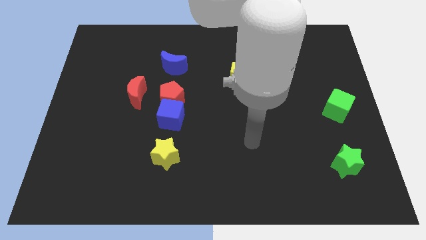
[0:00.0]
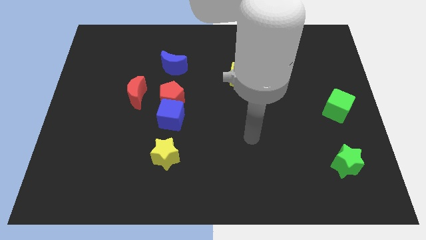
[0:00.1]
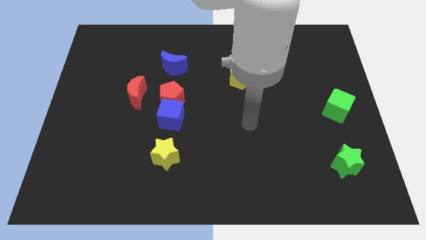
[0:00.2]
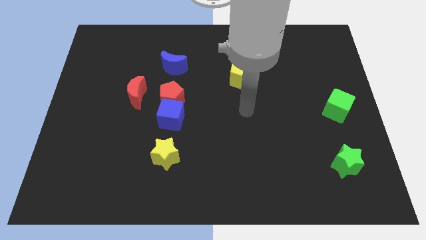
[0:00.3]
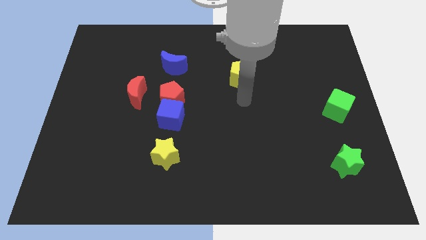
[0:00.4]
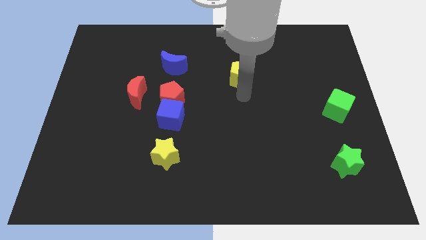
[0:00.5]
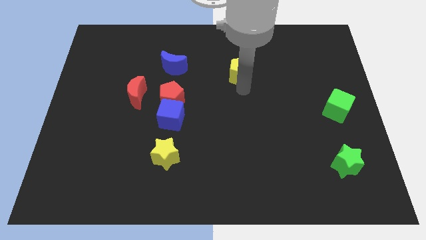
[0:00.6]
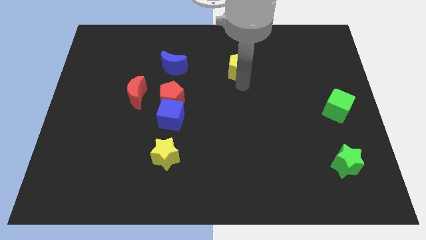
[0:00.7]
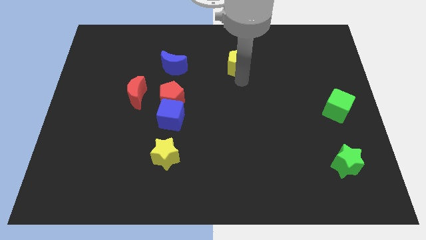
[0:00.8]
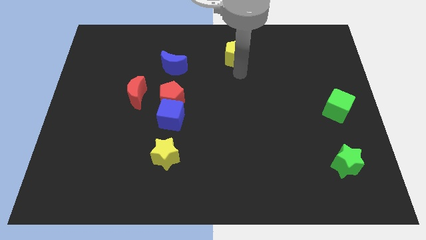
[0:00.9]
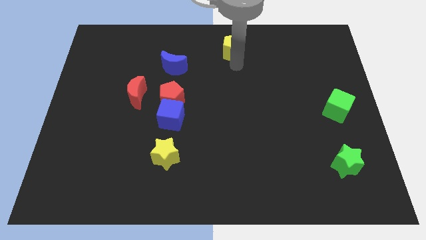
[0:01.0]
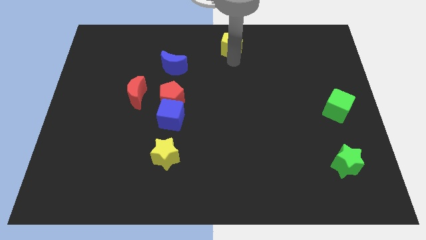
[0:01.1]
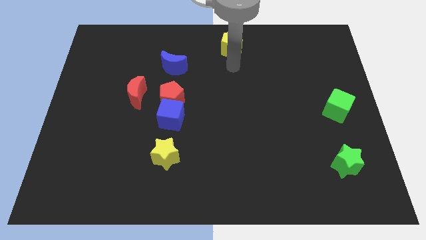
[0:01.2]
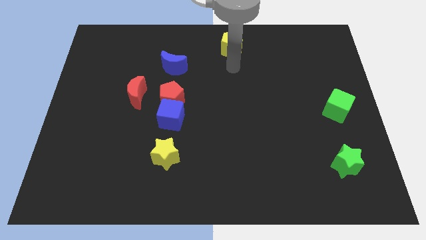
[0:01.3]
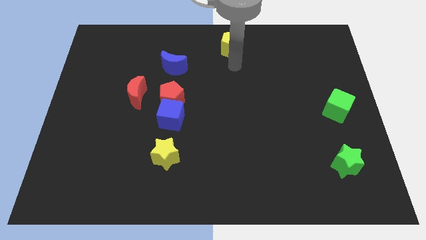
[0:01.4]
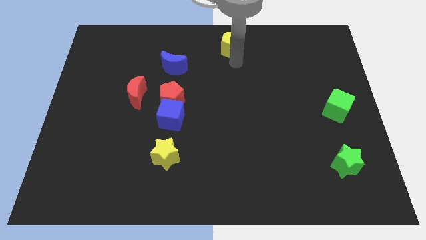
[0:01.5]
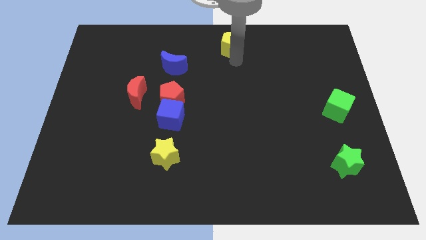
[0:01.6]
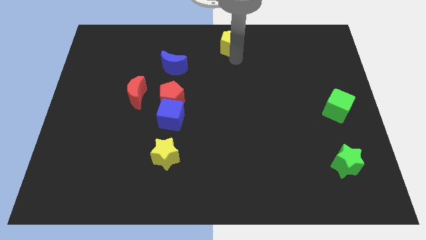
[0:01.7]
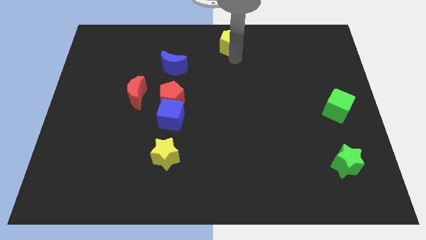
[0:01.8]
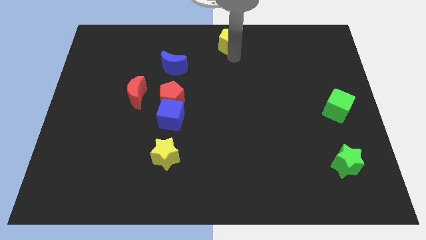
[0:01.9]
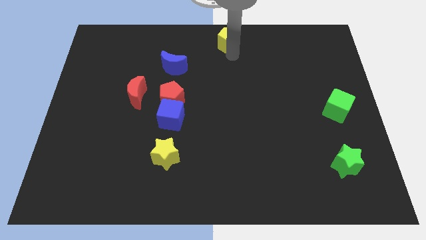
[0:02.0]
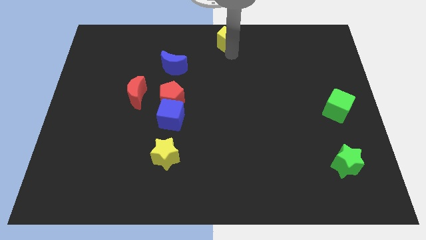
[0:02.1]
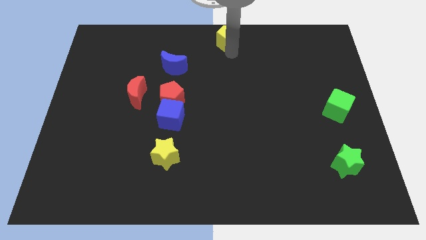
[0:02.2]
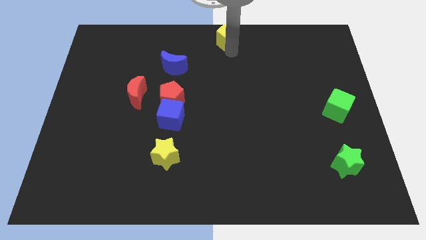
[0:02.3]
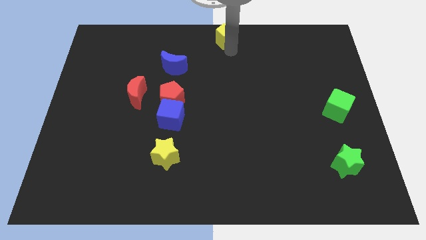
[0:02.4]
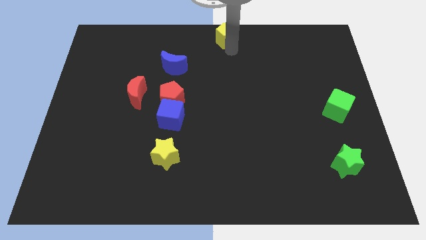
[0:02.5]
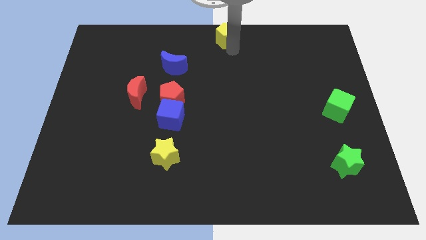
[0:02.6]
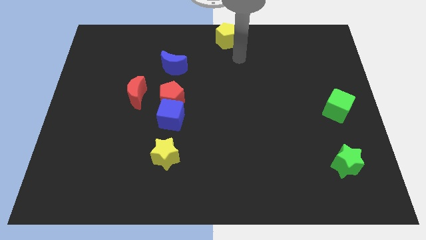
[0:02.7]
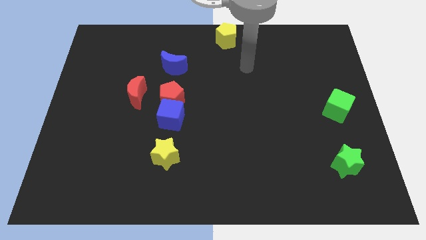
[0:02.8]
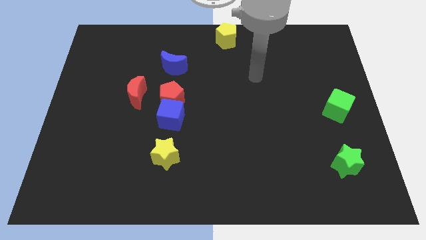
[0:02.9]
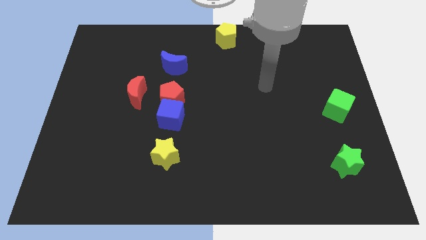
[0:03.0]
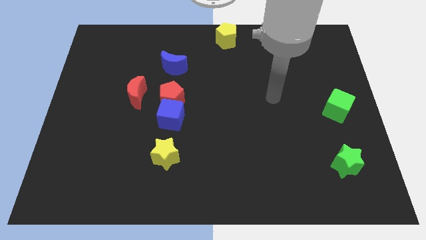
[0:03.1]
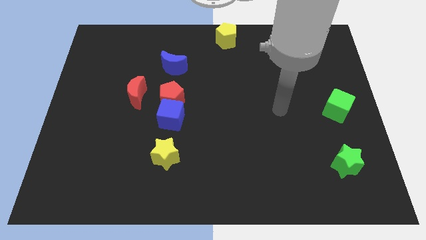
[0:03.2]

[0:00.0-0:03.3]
place the yellow pentagon at the top center of the board

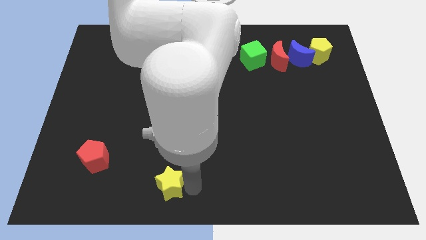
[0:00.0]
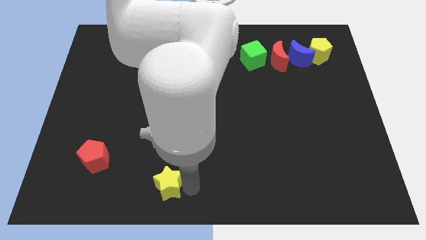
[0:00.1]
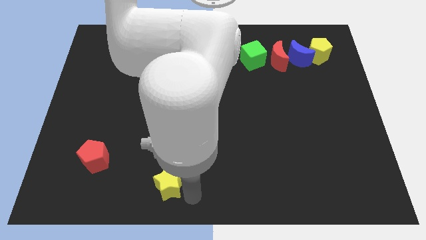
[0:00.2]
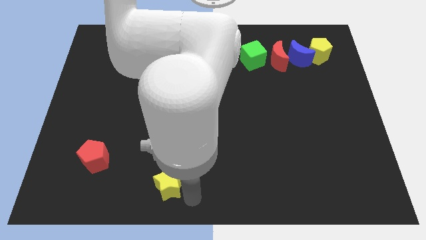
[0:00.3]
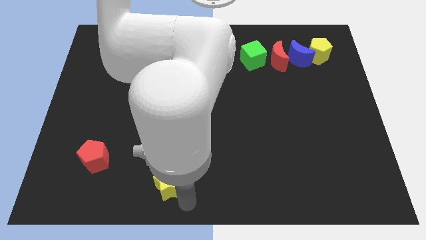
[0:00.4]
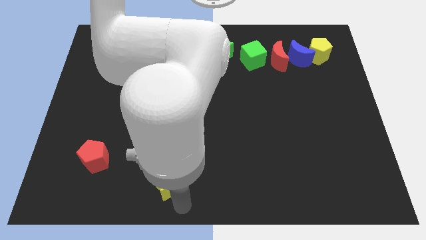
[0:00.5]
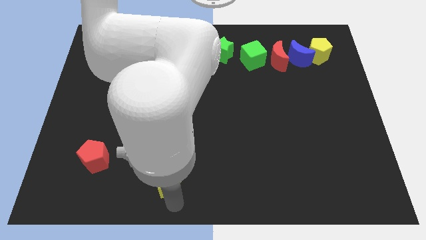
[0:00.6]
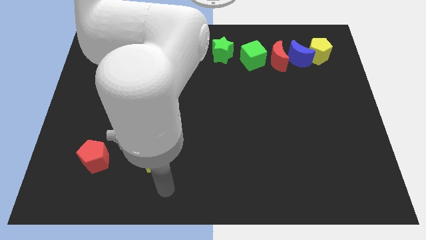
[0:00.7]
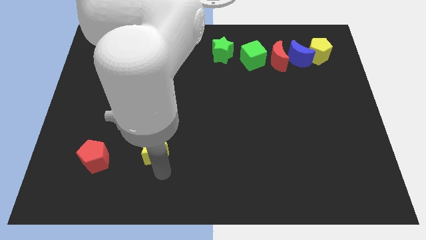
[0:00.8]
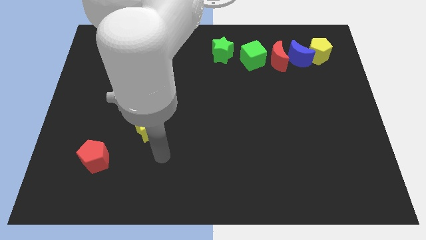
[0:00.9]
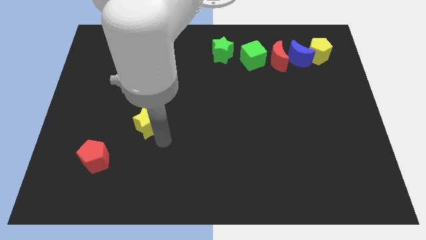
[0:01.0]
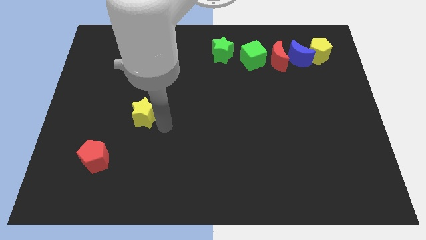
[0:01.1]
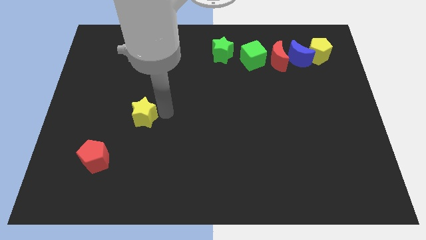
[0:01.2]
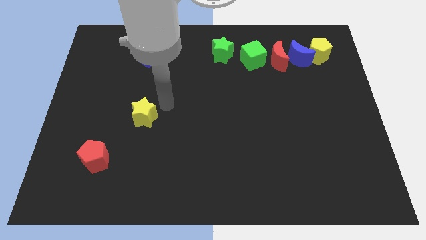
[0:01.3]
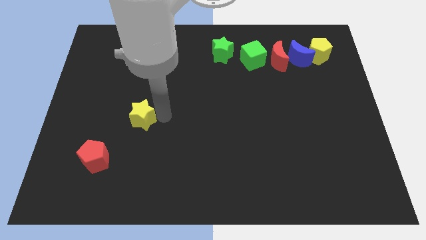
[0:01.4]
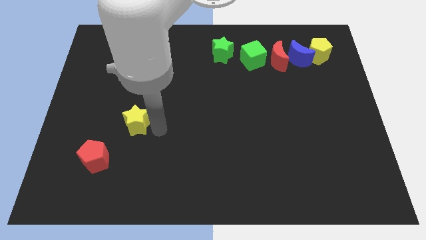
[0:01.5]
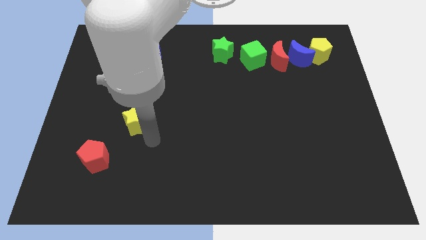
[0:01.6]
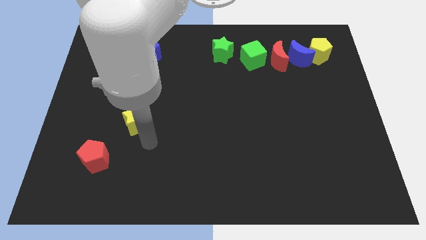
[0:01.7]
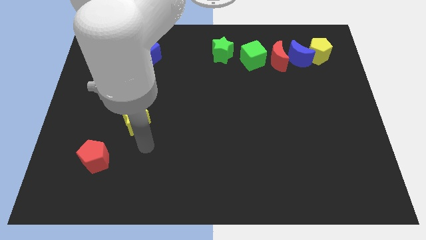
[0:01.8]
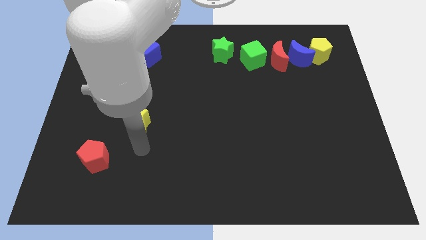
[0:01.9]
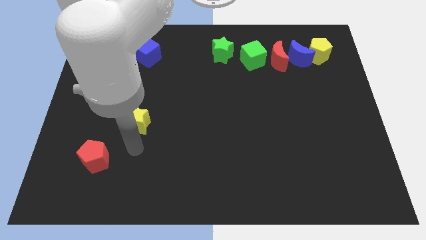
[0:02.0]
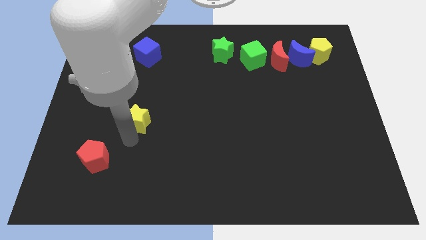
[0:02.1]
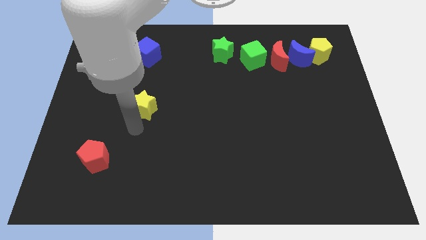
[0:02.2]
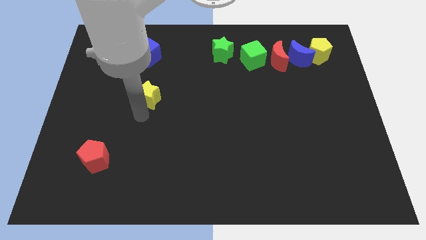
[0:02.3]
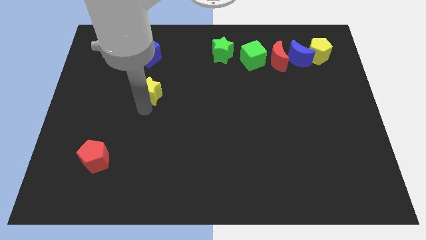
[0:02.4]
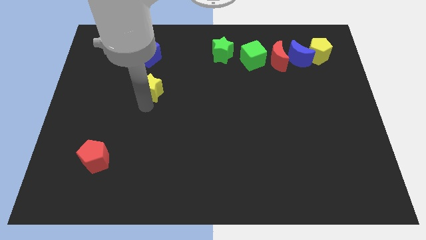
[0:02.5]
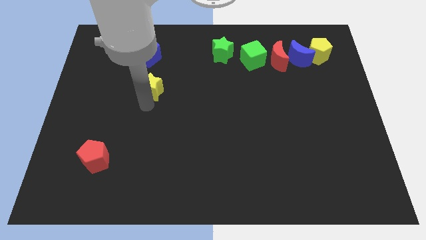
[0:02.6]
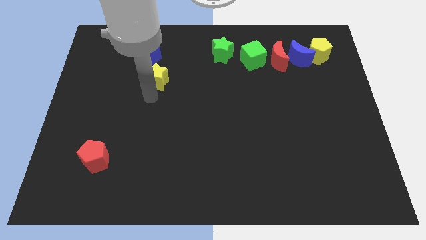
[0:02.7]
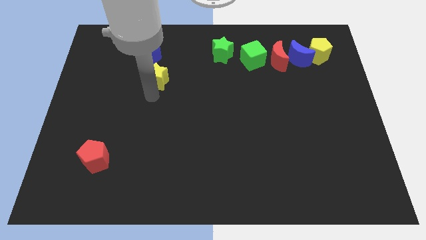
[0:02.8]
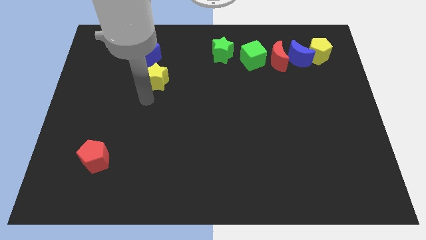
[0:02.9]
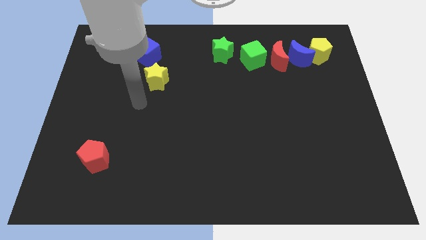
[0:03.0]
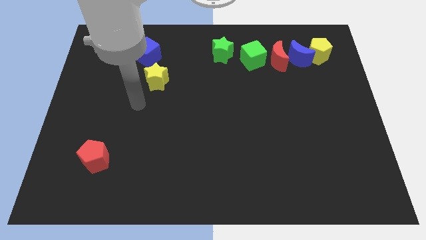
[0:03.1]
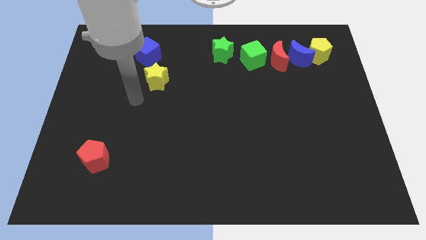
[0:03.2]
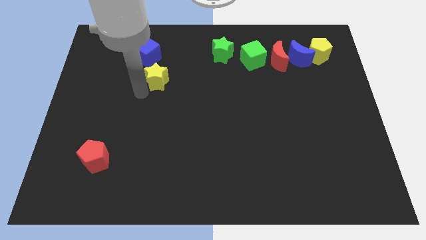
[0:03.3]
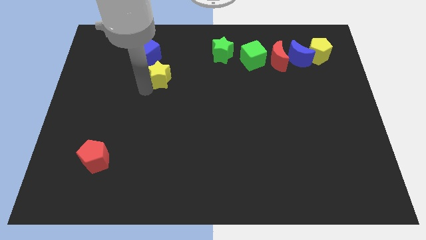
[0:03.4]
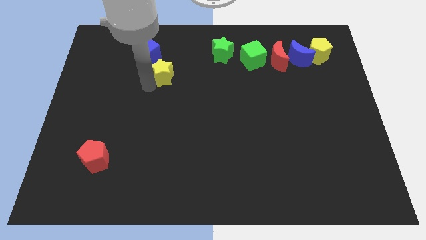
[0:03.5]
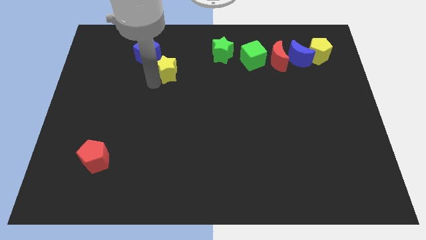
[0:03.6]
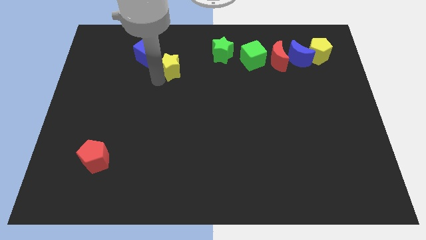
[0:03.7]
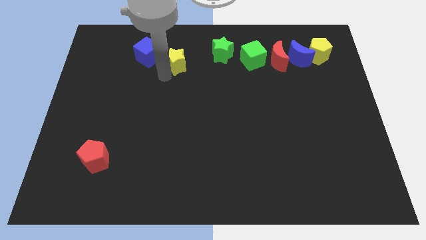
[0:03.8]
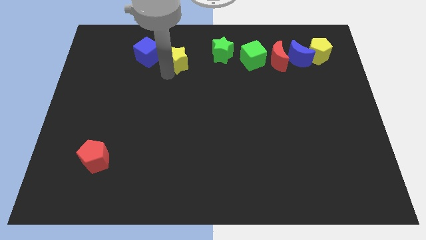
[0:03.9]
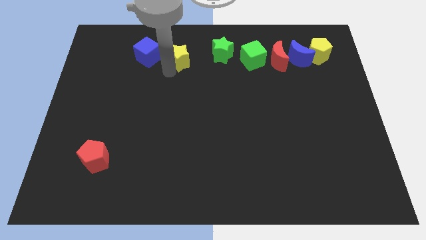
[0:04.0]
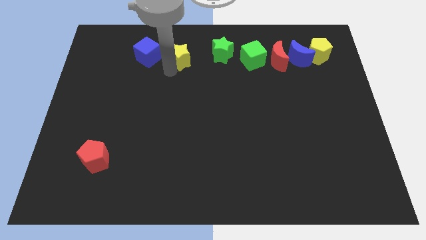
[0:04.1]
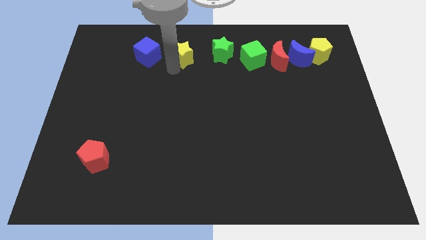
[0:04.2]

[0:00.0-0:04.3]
place the yellow star left to the green star

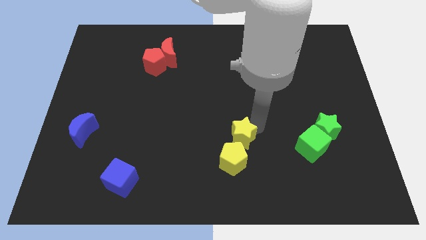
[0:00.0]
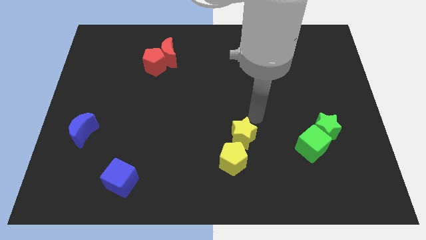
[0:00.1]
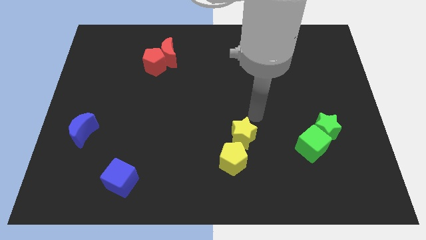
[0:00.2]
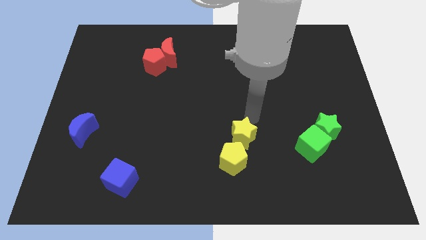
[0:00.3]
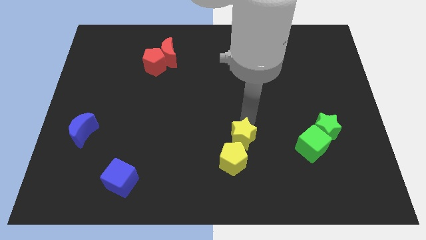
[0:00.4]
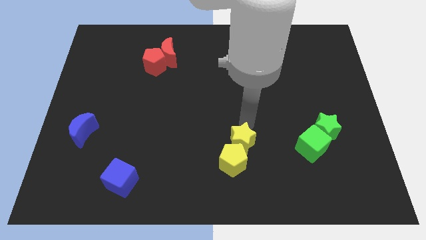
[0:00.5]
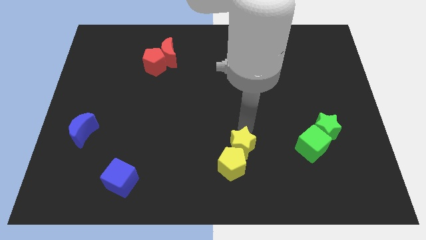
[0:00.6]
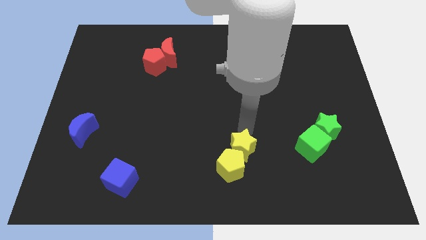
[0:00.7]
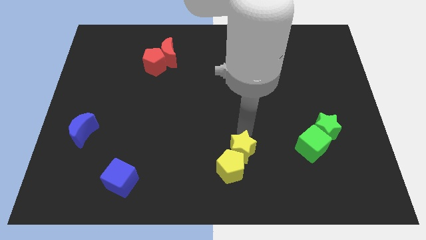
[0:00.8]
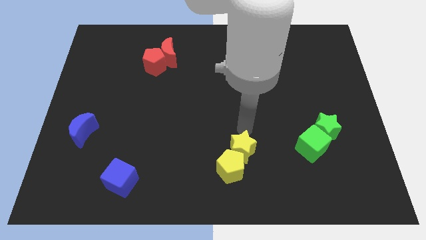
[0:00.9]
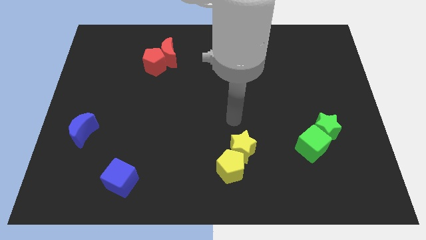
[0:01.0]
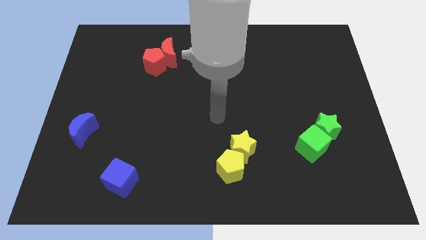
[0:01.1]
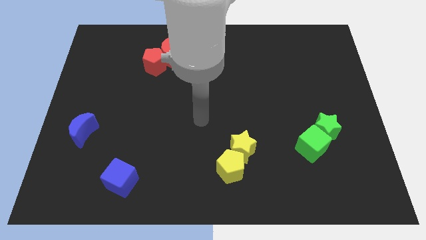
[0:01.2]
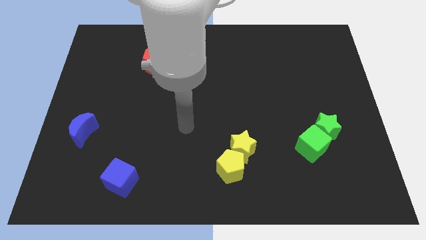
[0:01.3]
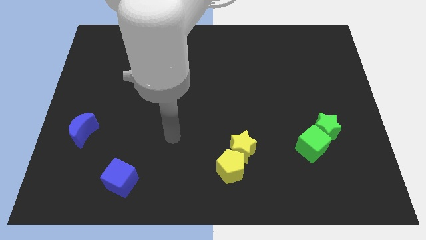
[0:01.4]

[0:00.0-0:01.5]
push both the yellow blocks slightly to the bottom side of the board
